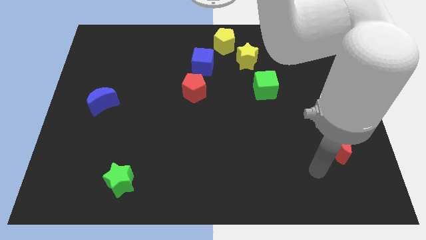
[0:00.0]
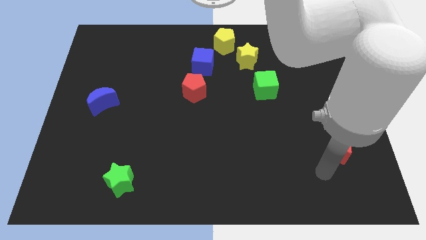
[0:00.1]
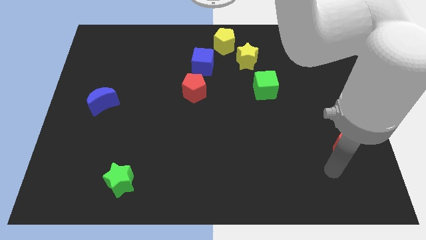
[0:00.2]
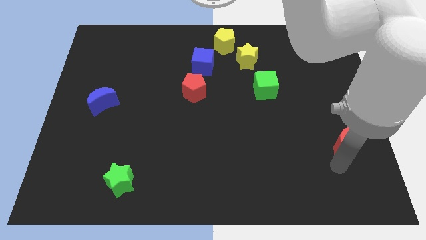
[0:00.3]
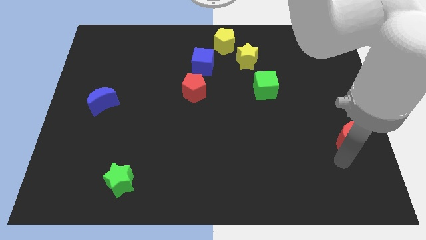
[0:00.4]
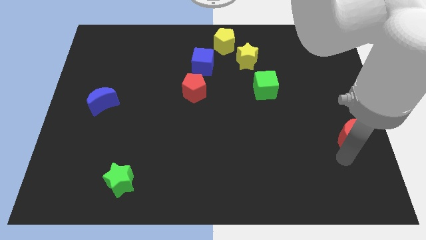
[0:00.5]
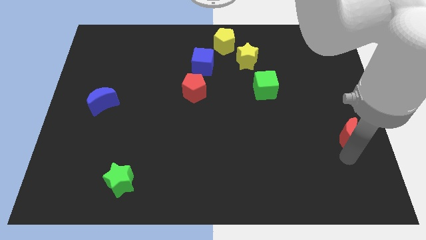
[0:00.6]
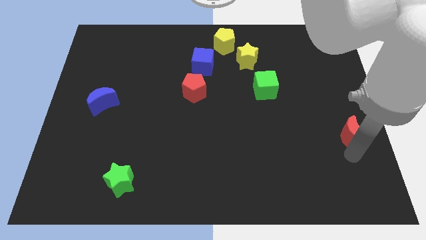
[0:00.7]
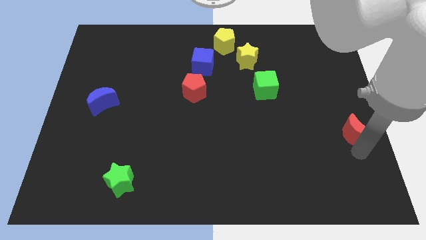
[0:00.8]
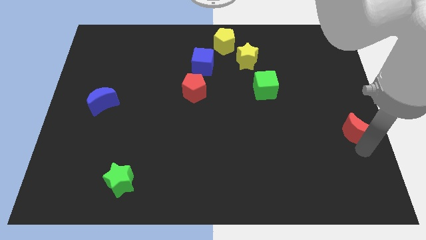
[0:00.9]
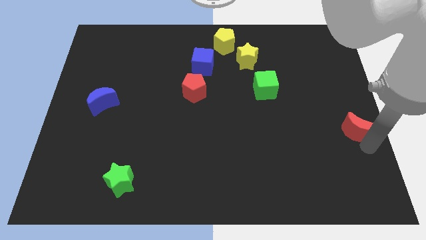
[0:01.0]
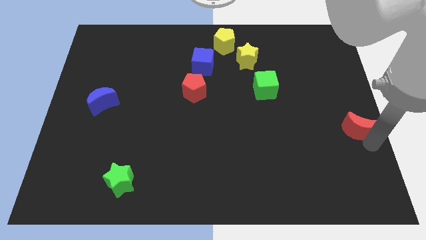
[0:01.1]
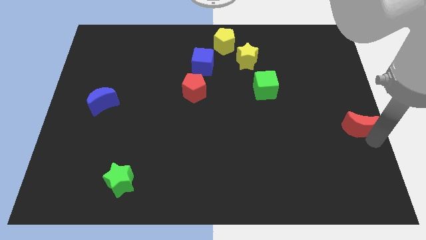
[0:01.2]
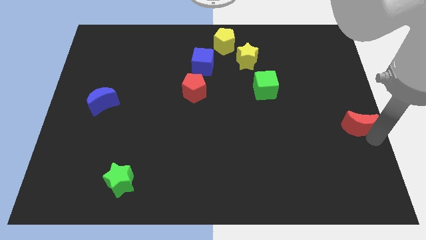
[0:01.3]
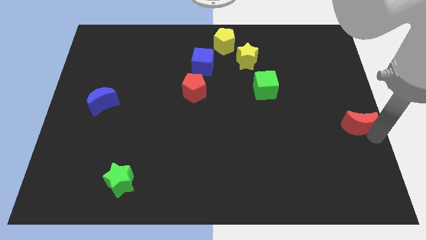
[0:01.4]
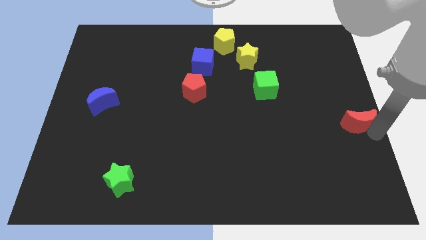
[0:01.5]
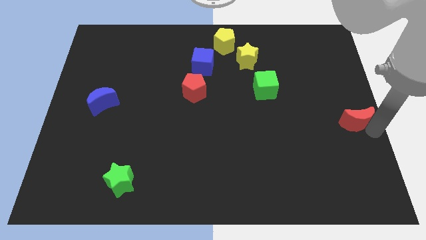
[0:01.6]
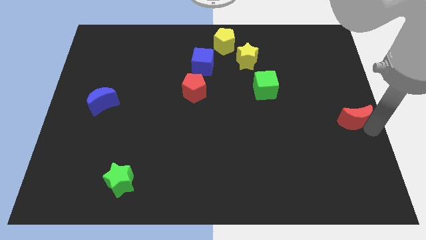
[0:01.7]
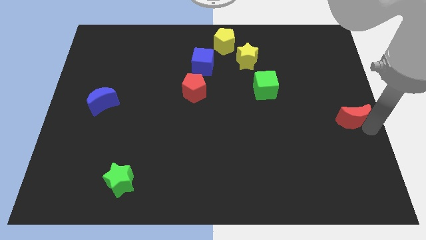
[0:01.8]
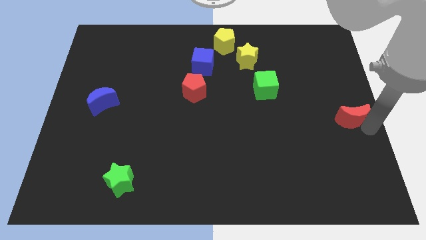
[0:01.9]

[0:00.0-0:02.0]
push the red crescent slightly to the top

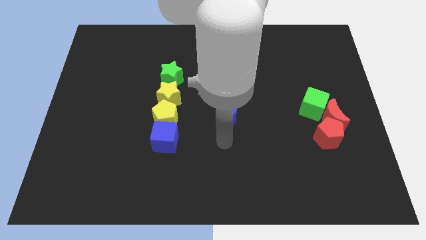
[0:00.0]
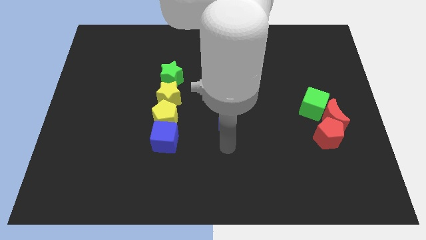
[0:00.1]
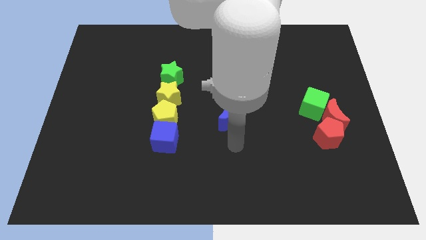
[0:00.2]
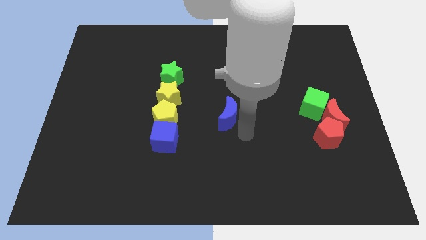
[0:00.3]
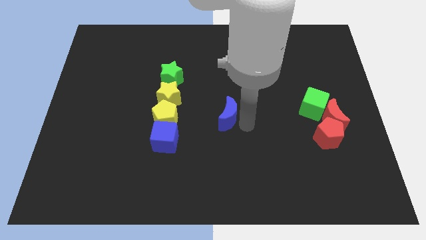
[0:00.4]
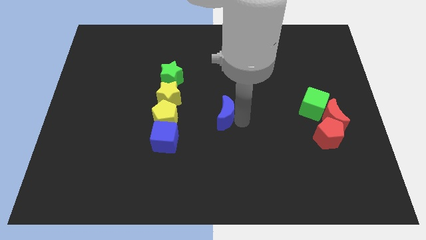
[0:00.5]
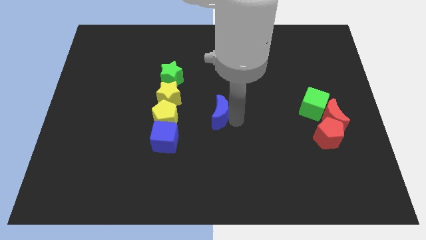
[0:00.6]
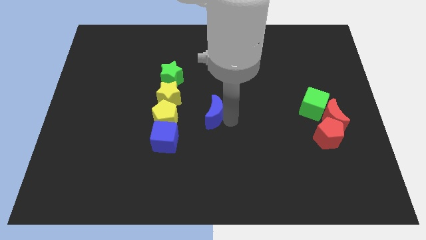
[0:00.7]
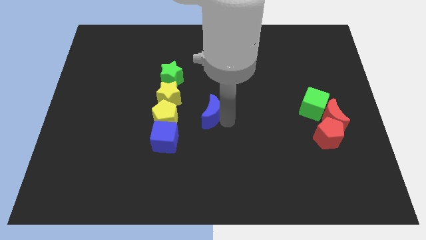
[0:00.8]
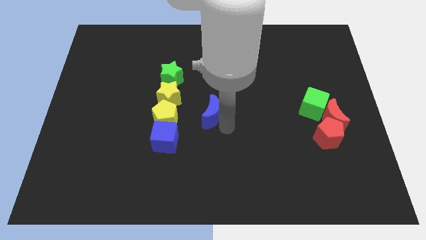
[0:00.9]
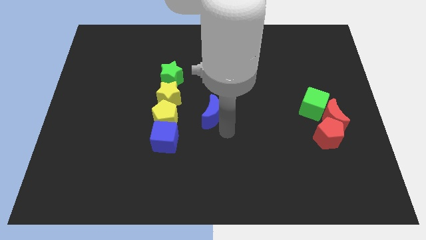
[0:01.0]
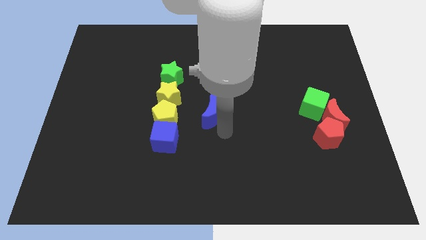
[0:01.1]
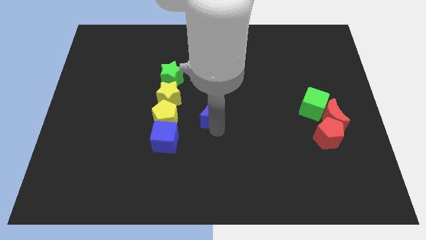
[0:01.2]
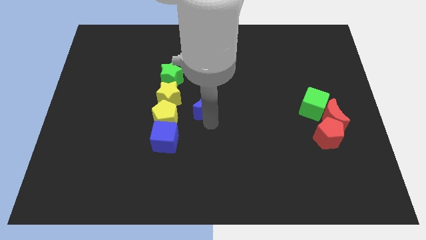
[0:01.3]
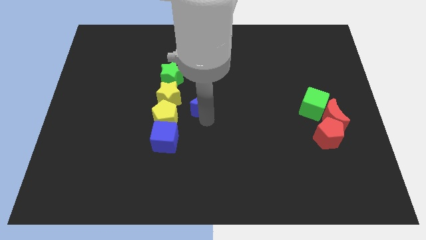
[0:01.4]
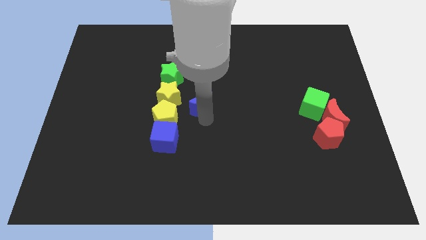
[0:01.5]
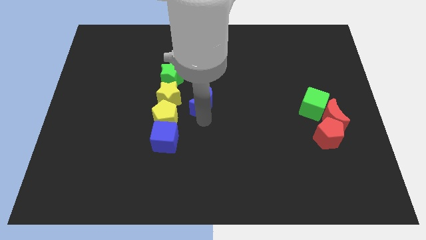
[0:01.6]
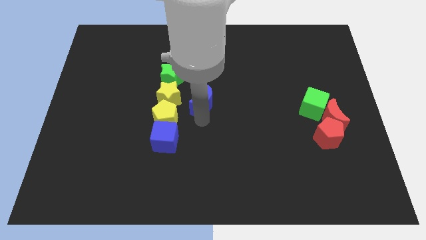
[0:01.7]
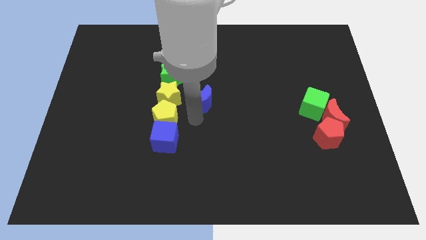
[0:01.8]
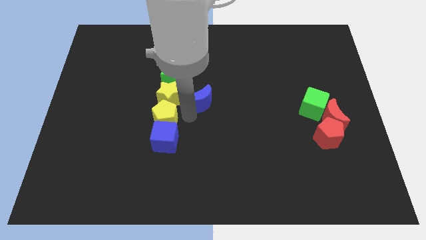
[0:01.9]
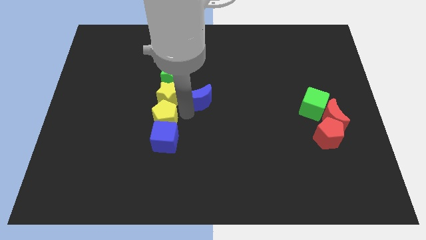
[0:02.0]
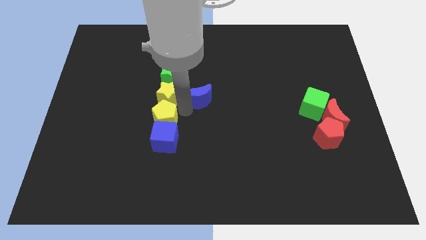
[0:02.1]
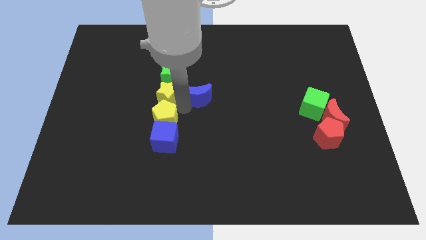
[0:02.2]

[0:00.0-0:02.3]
push the blue moon to the right side of the yellow star

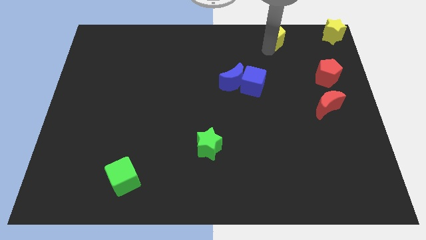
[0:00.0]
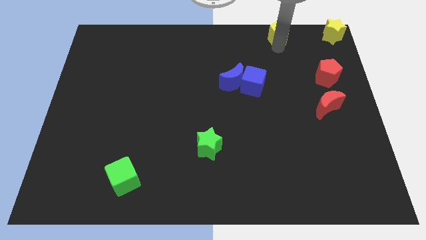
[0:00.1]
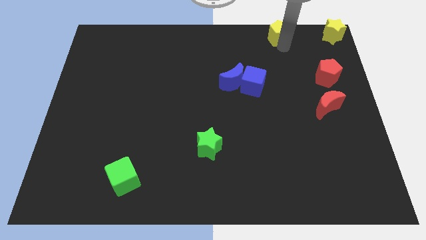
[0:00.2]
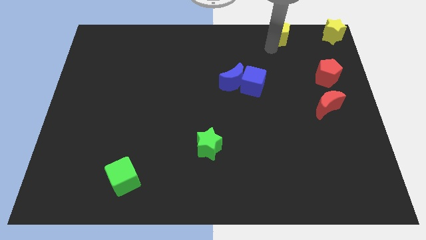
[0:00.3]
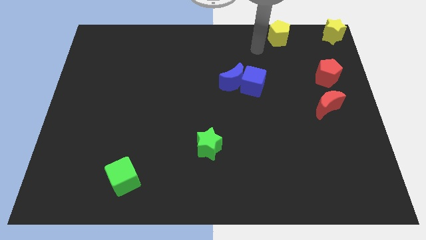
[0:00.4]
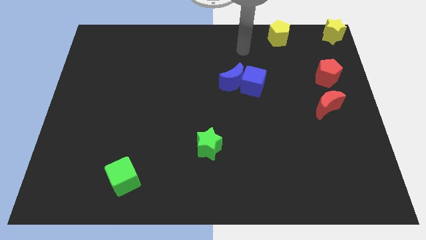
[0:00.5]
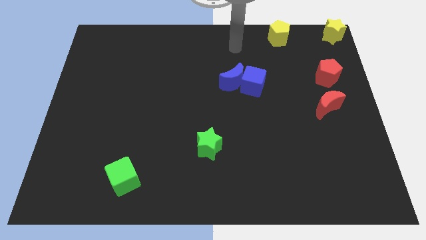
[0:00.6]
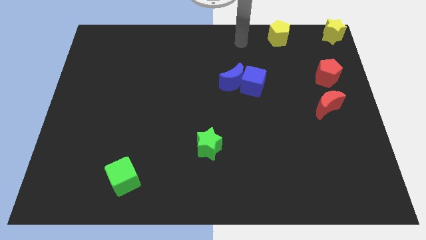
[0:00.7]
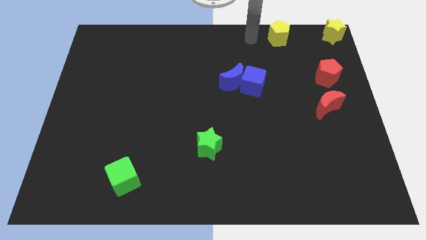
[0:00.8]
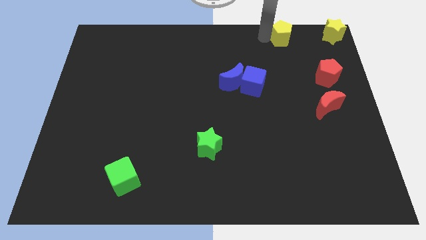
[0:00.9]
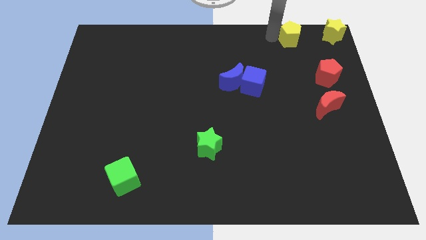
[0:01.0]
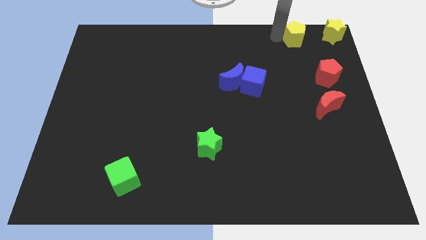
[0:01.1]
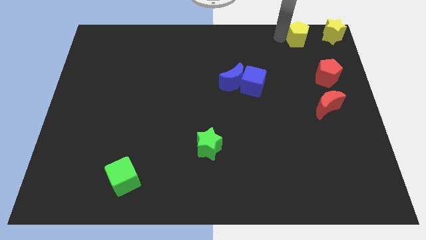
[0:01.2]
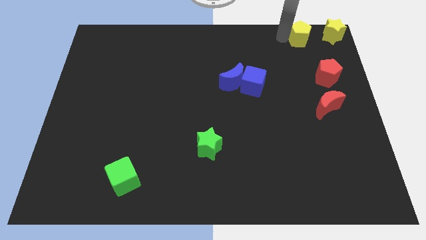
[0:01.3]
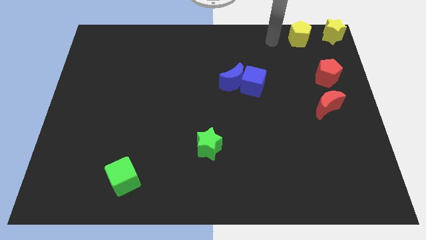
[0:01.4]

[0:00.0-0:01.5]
put the yellow pentagon at the left side of the yellow star

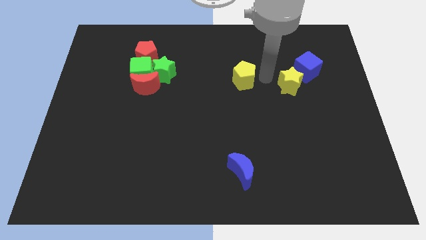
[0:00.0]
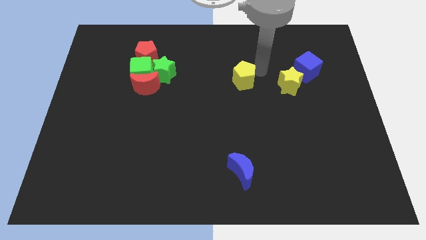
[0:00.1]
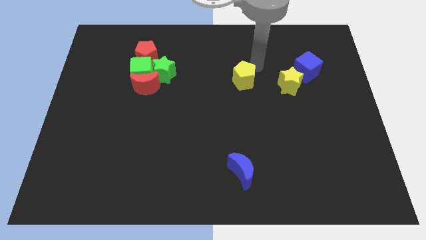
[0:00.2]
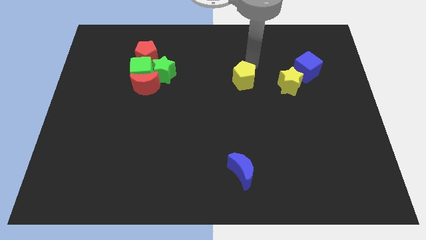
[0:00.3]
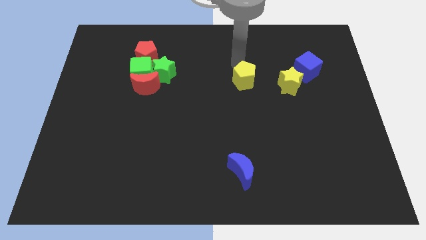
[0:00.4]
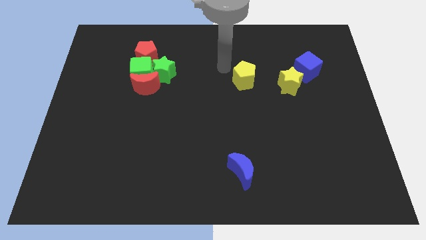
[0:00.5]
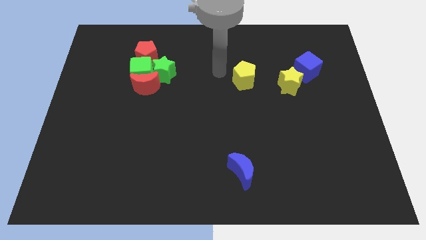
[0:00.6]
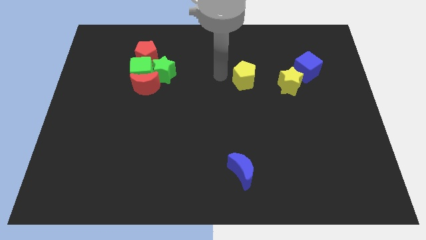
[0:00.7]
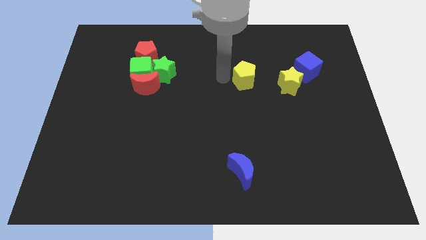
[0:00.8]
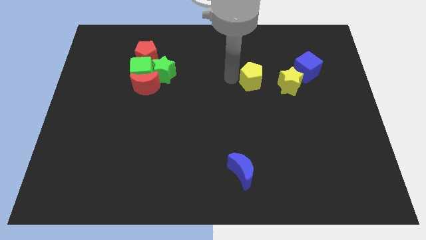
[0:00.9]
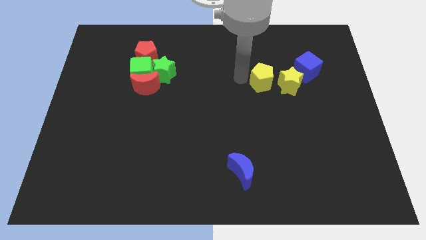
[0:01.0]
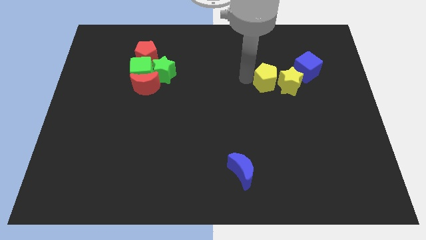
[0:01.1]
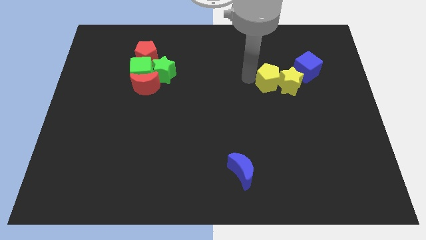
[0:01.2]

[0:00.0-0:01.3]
place the yellow pentagon left to the yellow star

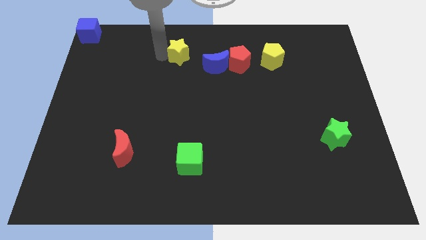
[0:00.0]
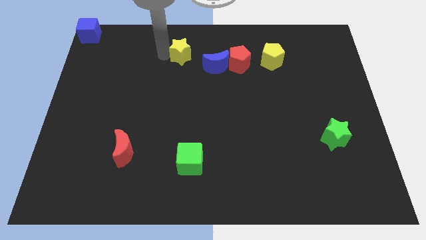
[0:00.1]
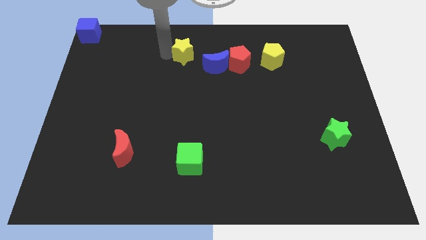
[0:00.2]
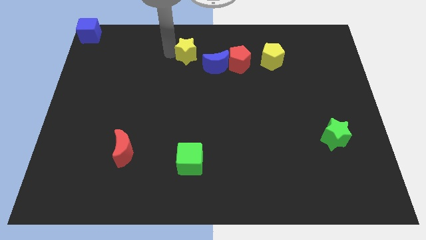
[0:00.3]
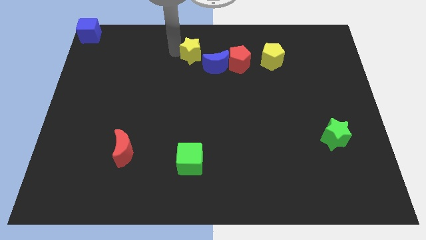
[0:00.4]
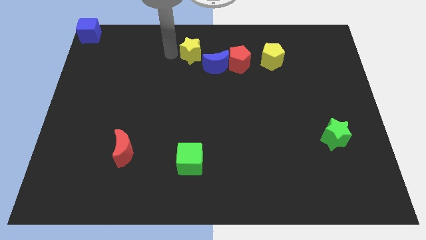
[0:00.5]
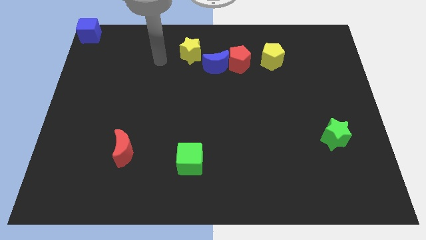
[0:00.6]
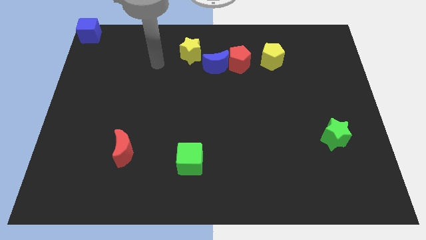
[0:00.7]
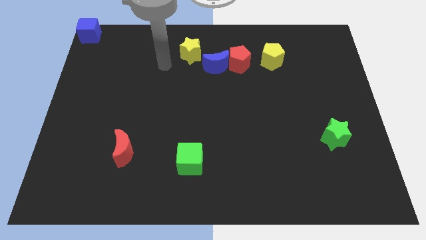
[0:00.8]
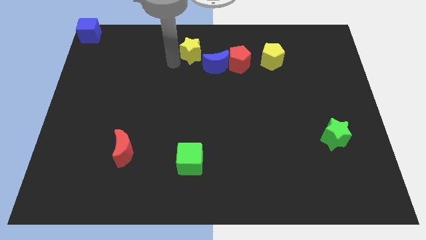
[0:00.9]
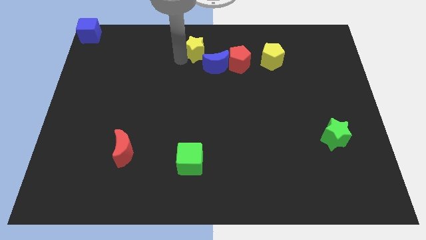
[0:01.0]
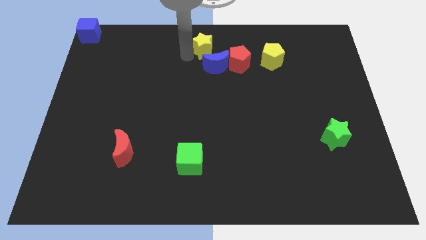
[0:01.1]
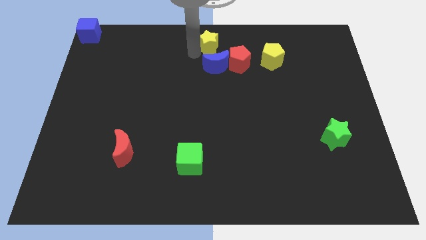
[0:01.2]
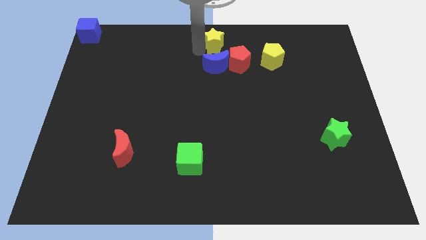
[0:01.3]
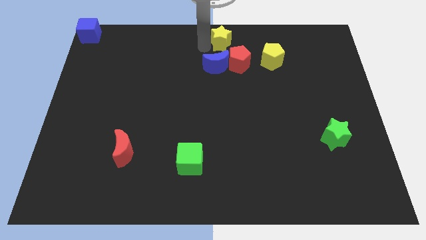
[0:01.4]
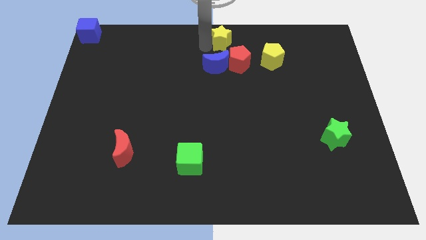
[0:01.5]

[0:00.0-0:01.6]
place yellow star above the blue moon

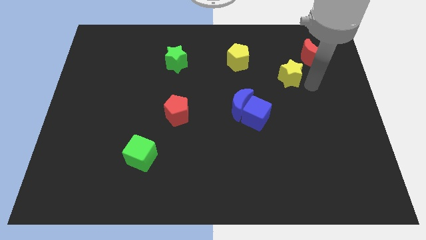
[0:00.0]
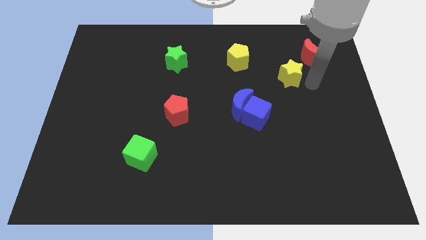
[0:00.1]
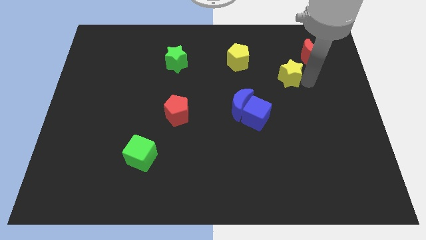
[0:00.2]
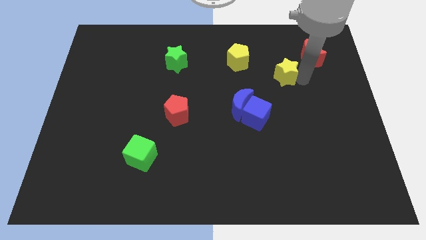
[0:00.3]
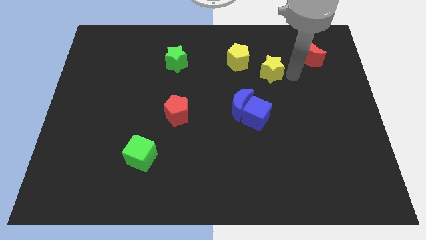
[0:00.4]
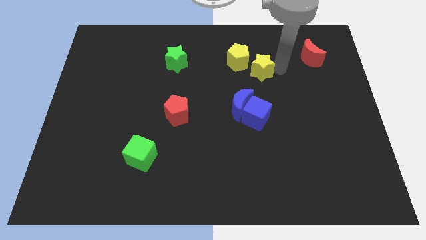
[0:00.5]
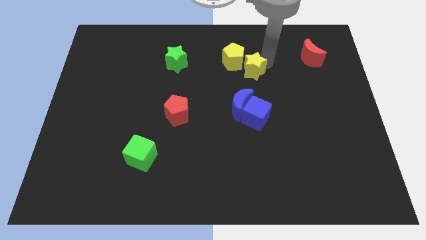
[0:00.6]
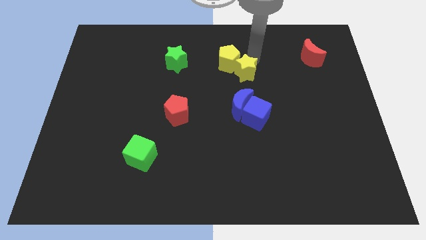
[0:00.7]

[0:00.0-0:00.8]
move the yellow star to the top of the blue crescent
